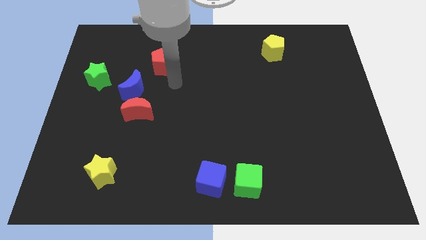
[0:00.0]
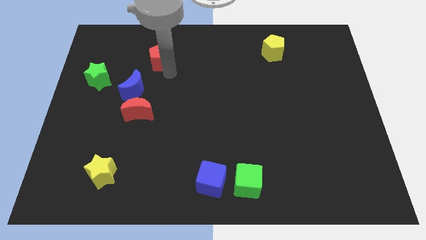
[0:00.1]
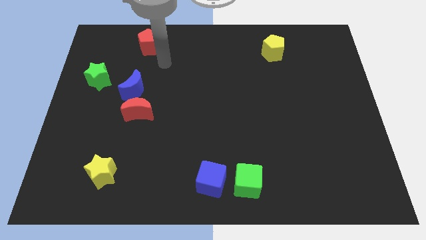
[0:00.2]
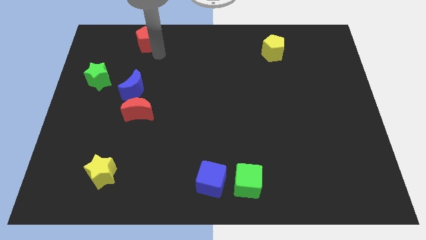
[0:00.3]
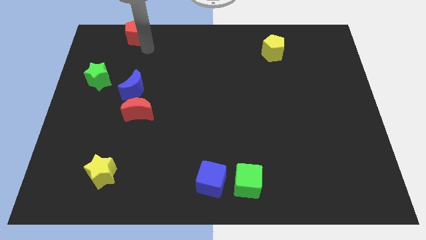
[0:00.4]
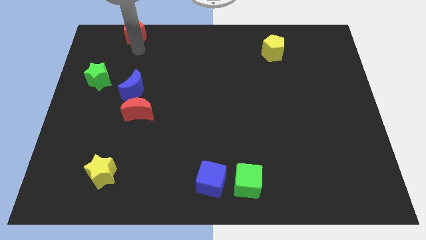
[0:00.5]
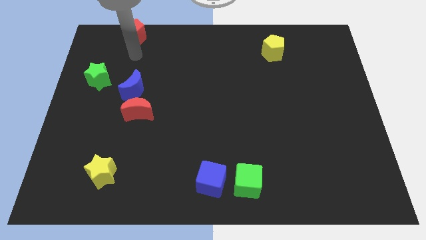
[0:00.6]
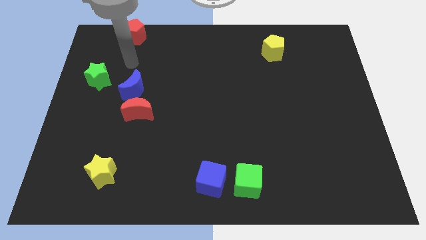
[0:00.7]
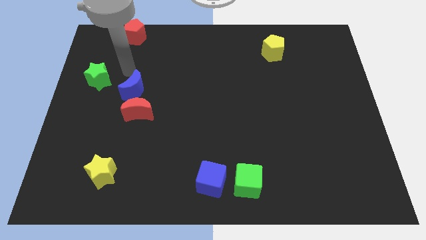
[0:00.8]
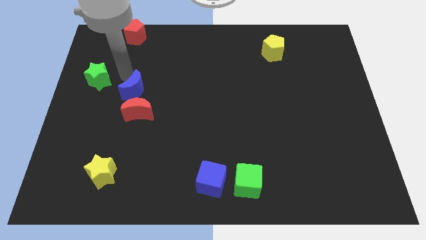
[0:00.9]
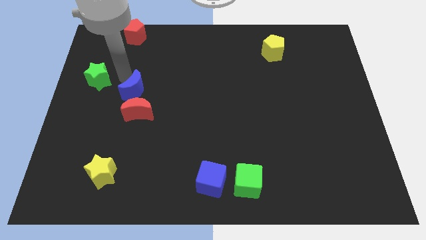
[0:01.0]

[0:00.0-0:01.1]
slide the red pentagon to the top side

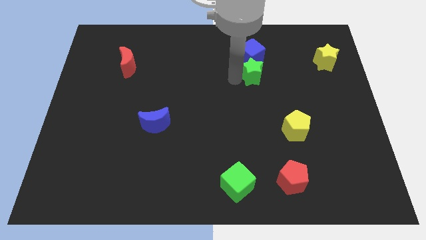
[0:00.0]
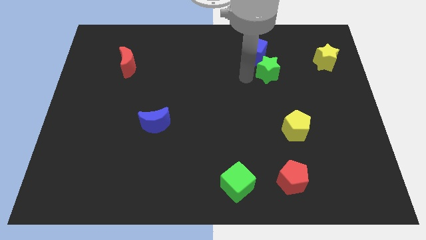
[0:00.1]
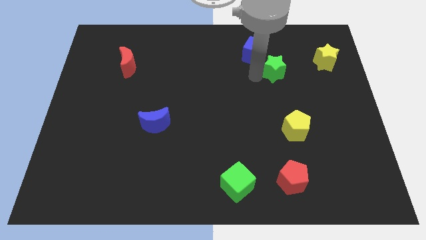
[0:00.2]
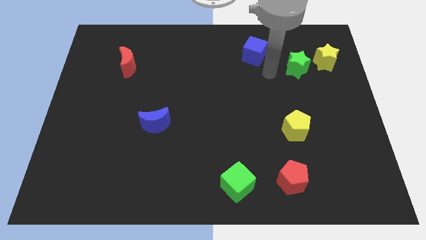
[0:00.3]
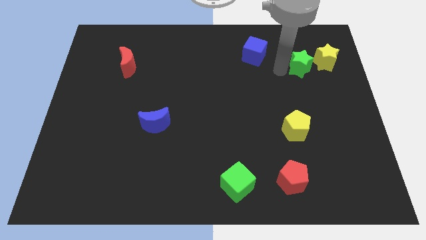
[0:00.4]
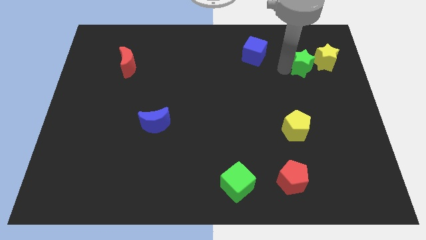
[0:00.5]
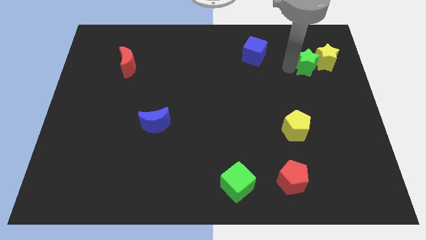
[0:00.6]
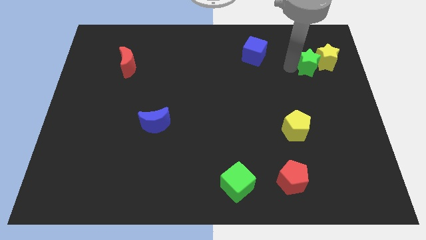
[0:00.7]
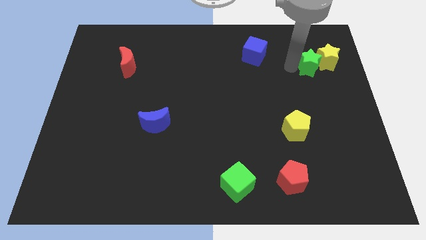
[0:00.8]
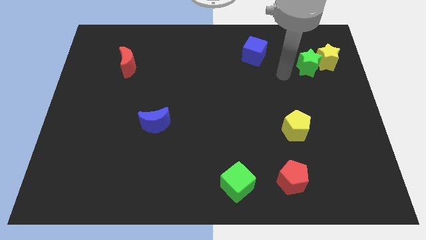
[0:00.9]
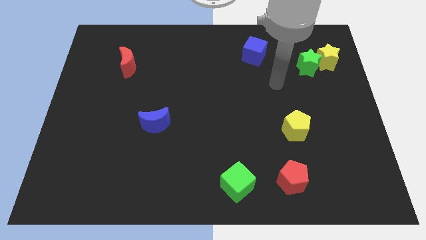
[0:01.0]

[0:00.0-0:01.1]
push the green star into the yellow star

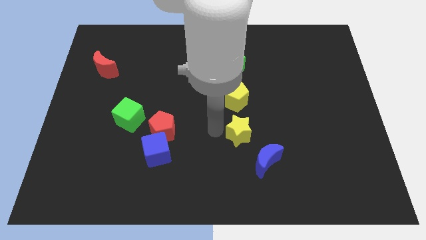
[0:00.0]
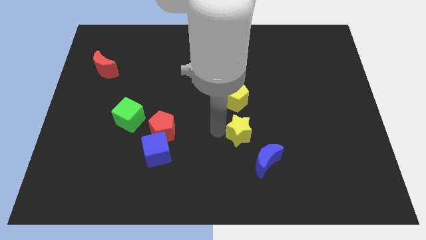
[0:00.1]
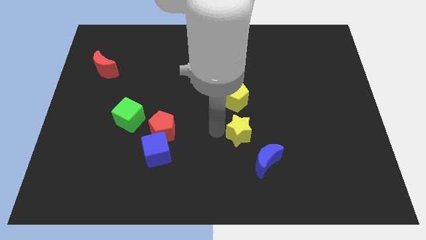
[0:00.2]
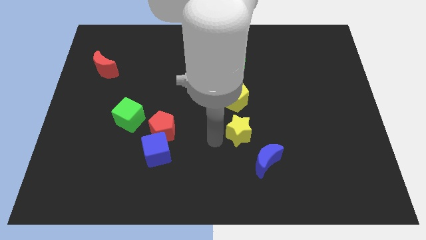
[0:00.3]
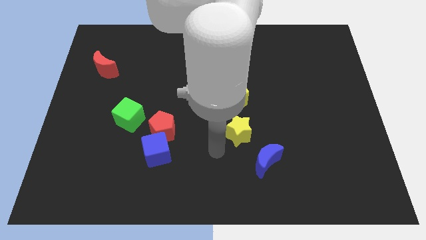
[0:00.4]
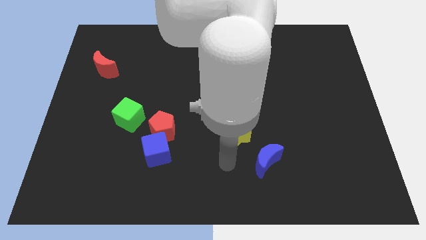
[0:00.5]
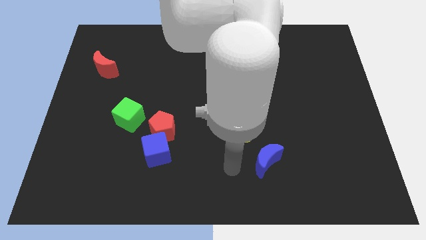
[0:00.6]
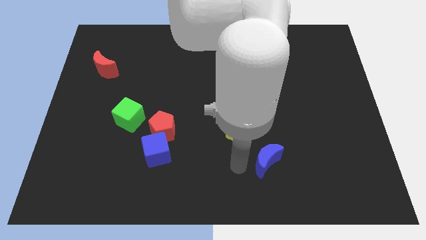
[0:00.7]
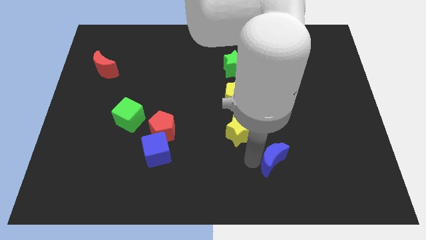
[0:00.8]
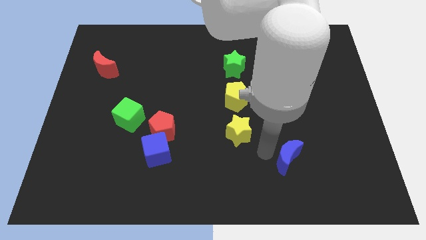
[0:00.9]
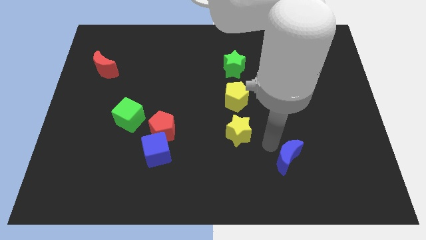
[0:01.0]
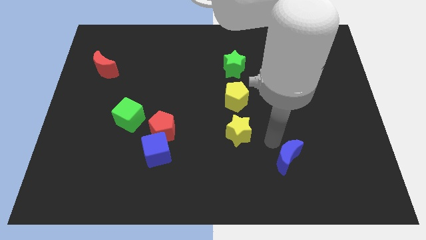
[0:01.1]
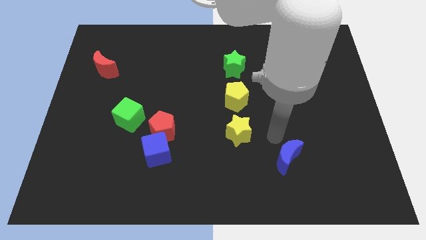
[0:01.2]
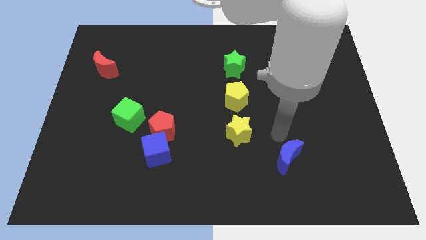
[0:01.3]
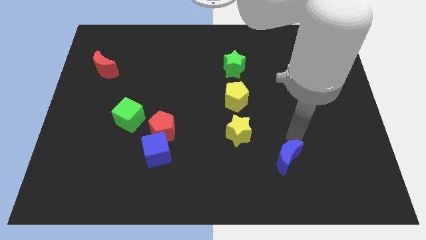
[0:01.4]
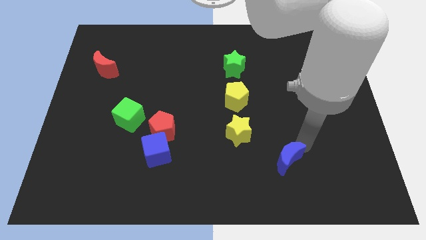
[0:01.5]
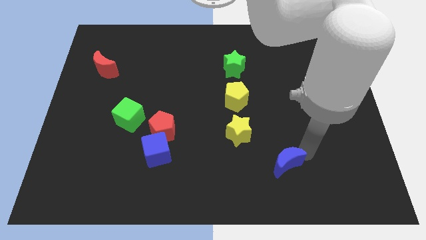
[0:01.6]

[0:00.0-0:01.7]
slightly push the blue moon to the right

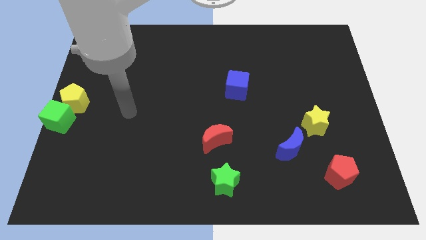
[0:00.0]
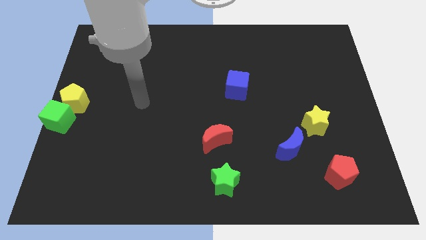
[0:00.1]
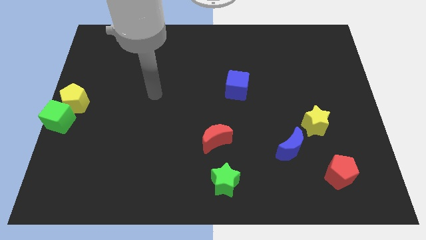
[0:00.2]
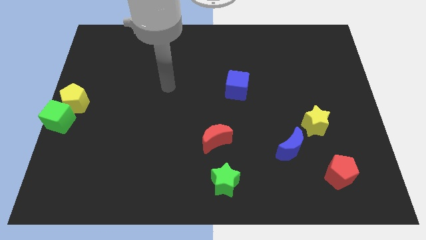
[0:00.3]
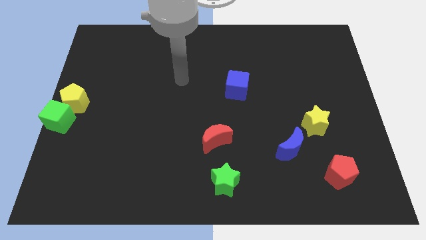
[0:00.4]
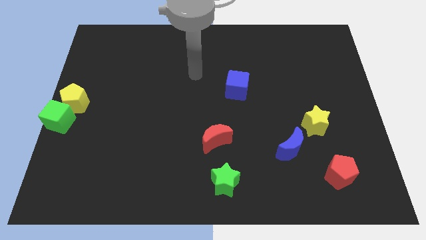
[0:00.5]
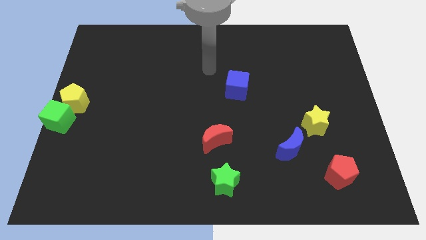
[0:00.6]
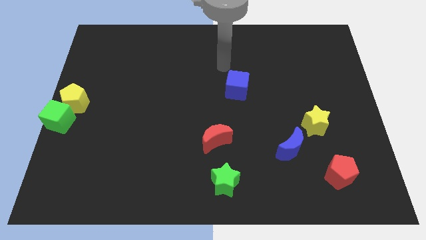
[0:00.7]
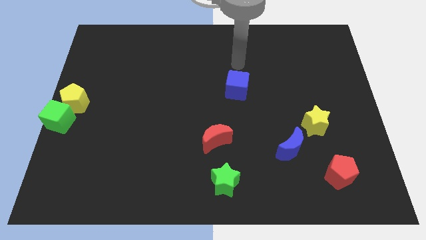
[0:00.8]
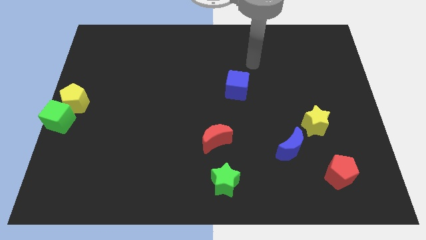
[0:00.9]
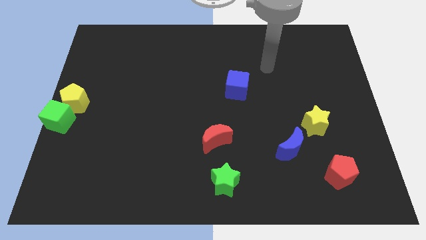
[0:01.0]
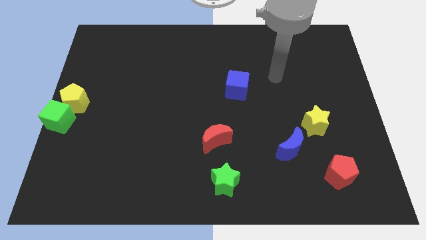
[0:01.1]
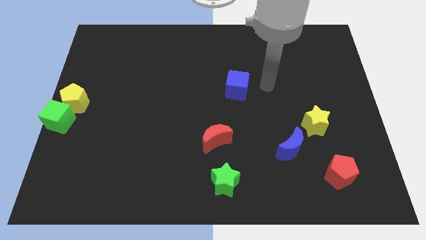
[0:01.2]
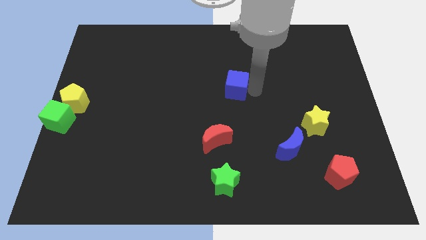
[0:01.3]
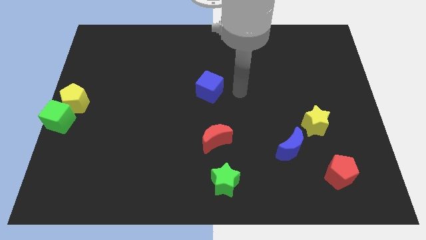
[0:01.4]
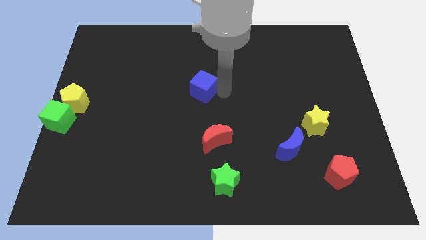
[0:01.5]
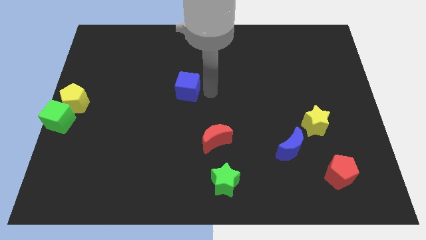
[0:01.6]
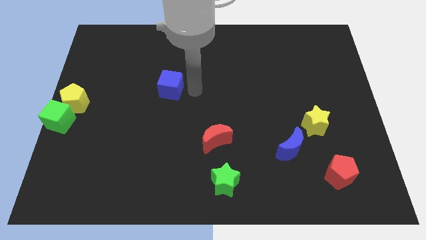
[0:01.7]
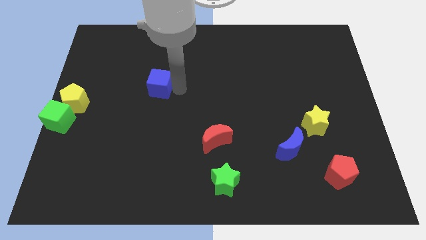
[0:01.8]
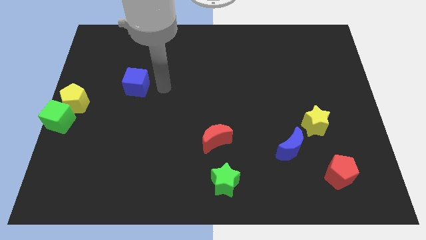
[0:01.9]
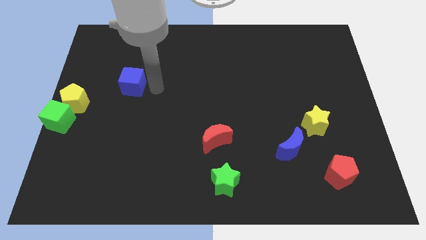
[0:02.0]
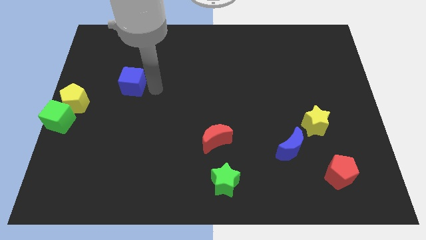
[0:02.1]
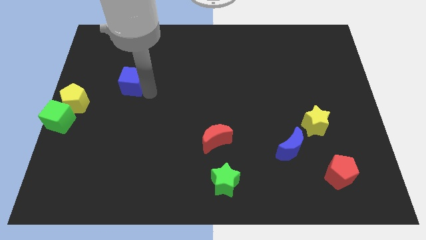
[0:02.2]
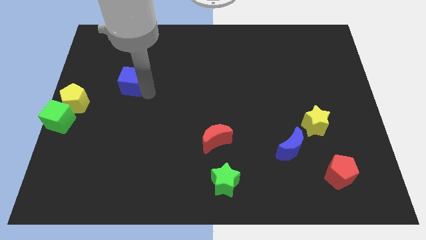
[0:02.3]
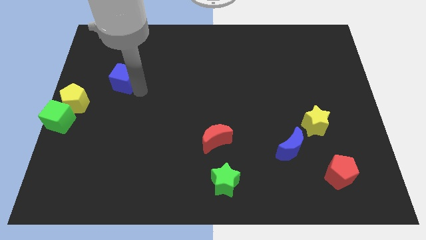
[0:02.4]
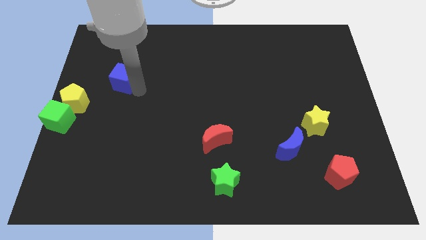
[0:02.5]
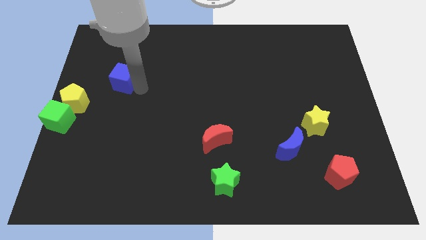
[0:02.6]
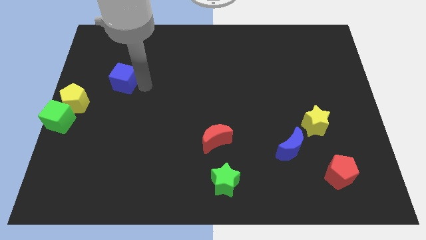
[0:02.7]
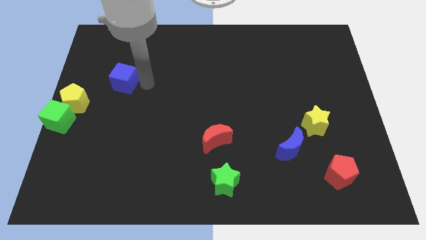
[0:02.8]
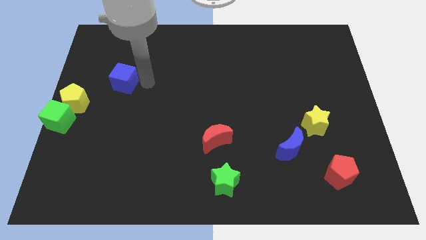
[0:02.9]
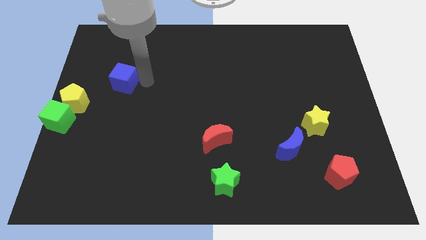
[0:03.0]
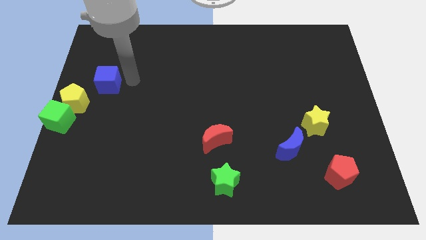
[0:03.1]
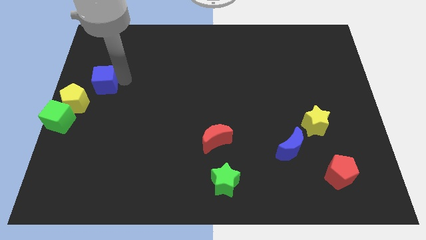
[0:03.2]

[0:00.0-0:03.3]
move blue cube towards yellow pentagon

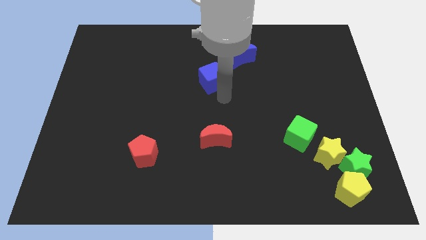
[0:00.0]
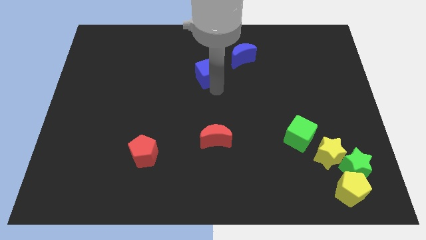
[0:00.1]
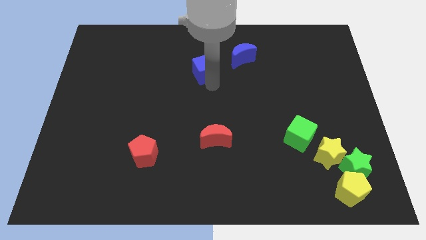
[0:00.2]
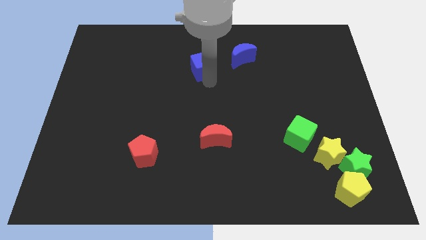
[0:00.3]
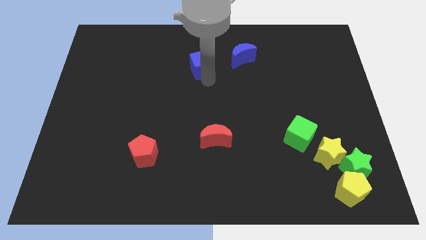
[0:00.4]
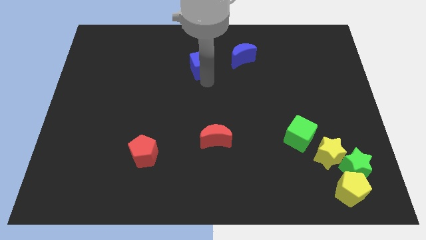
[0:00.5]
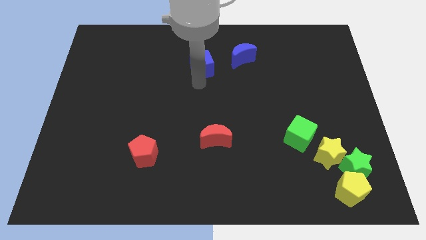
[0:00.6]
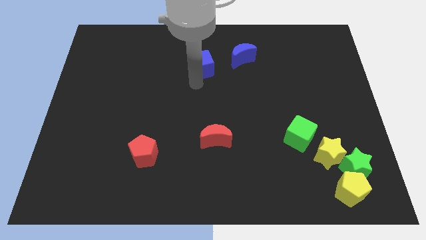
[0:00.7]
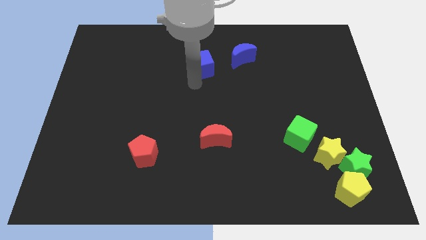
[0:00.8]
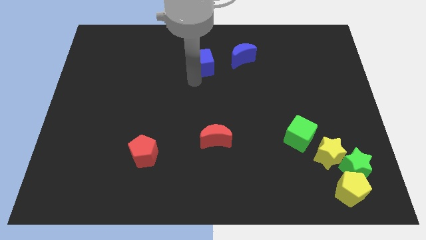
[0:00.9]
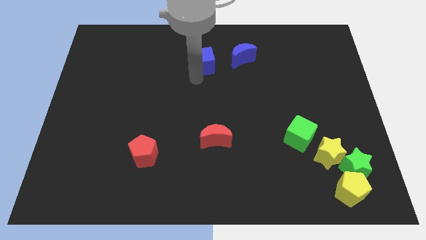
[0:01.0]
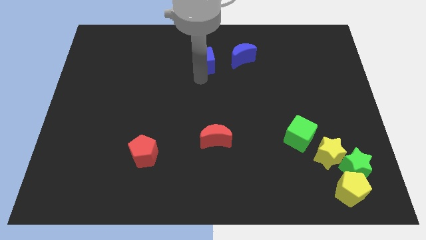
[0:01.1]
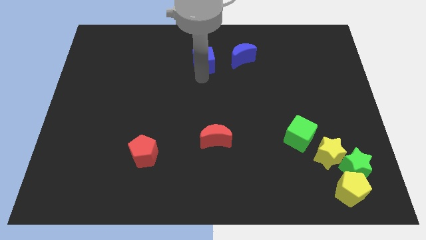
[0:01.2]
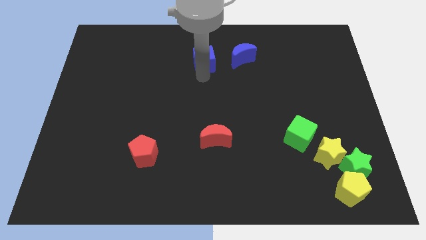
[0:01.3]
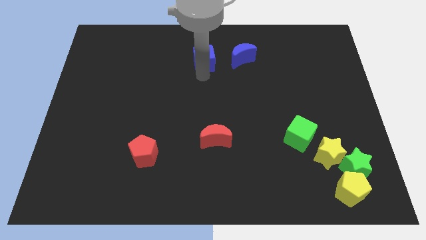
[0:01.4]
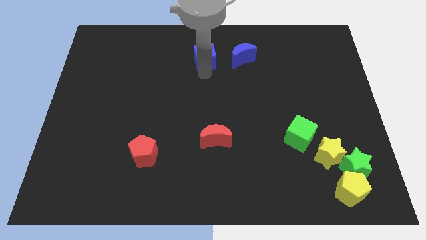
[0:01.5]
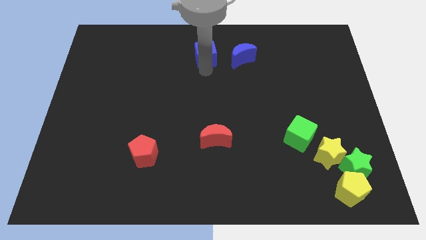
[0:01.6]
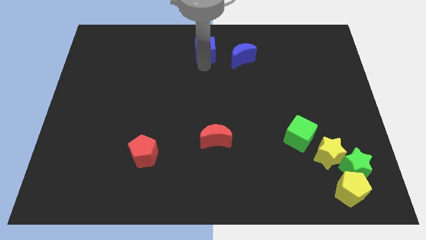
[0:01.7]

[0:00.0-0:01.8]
slide the blue cube to the left of the blue moon
